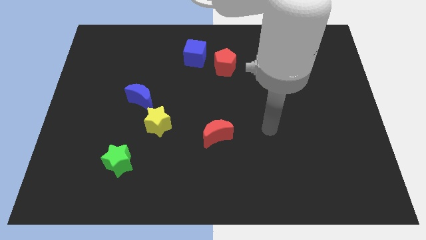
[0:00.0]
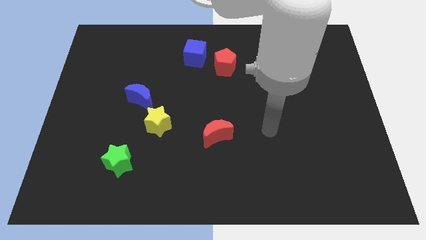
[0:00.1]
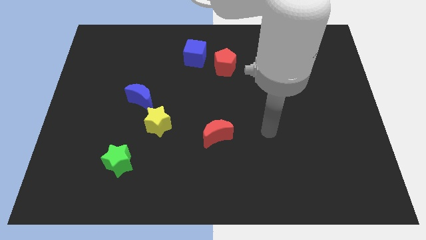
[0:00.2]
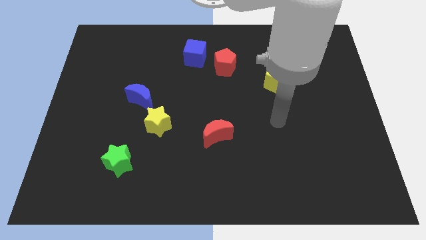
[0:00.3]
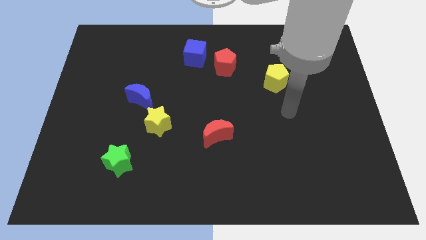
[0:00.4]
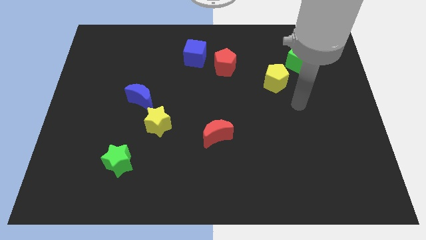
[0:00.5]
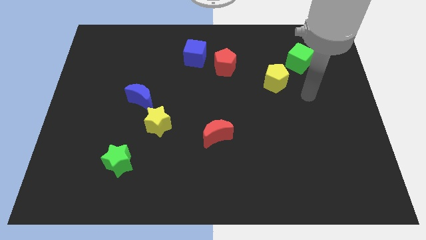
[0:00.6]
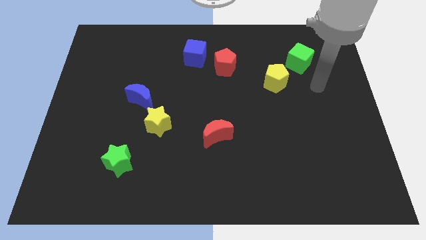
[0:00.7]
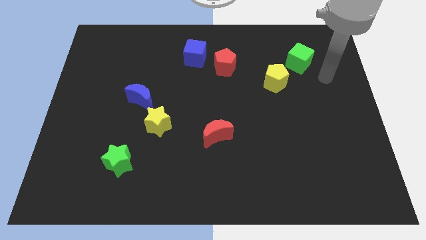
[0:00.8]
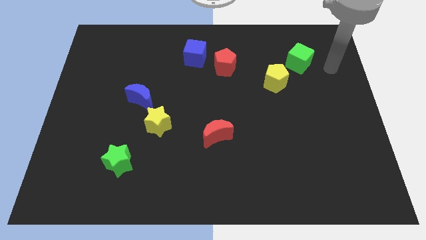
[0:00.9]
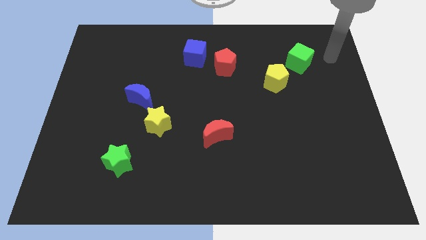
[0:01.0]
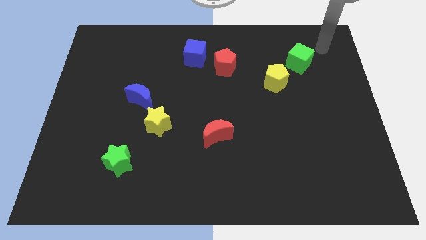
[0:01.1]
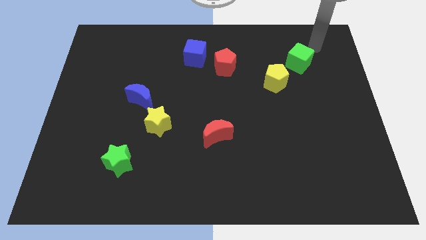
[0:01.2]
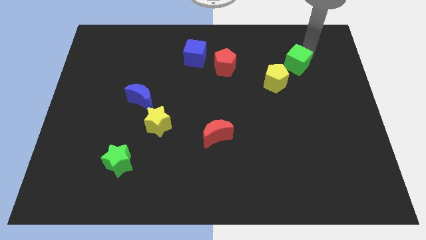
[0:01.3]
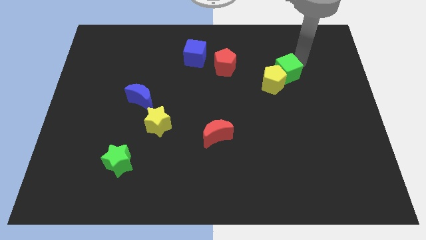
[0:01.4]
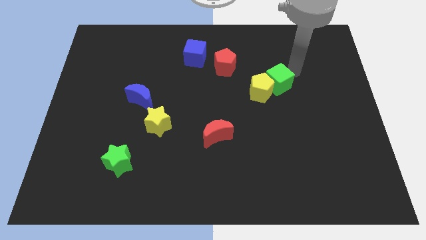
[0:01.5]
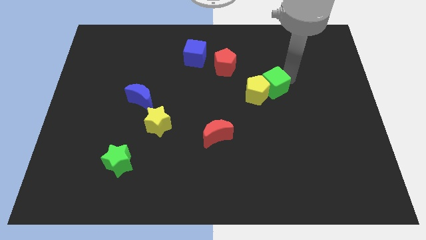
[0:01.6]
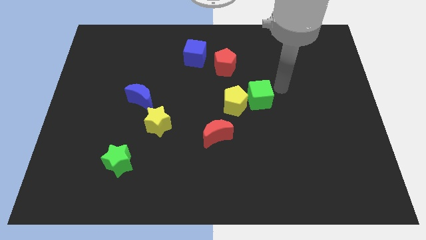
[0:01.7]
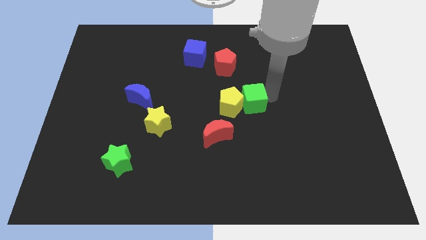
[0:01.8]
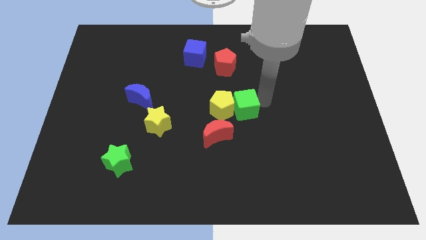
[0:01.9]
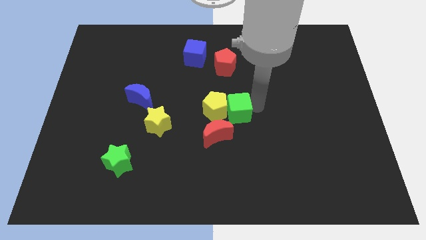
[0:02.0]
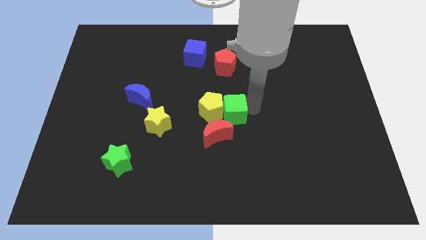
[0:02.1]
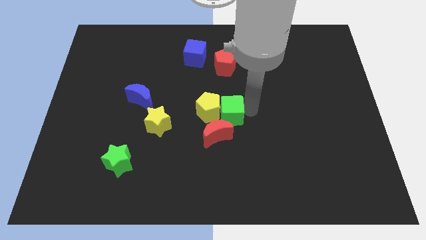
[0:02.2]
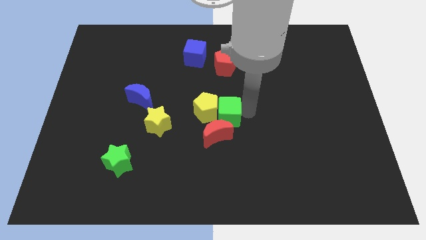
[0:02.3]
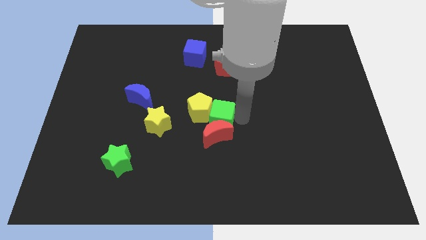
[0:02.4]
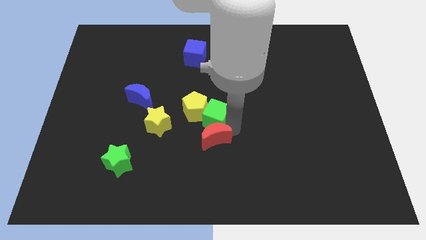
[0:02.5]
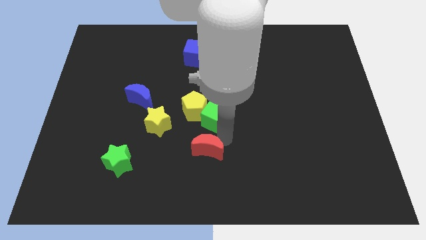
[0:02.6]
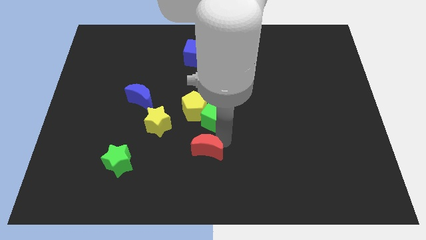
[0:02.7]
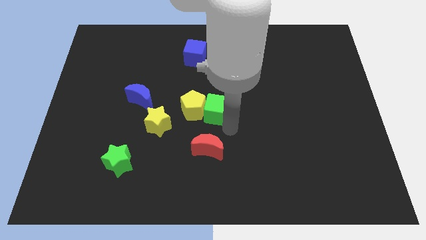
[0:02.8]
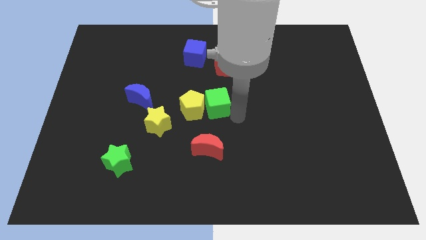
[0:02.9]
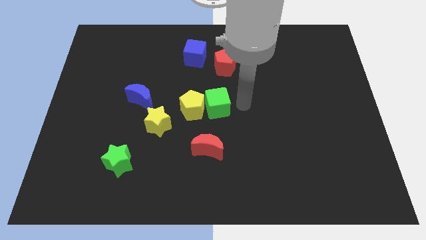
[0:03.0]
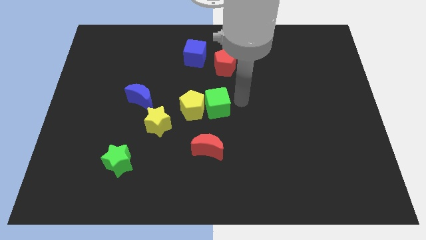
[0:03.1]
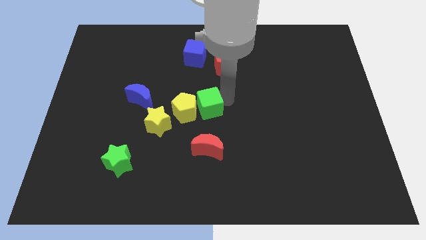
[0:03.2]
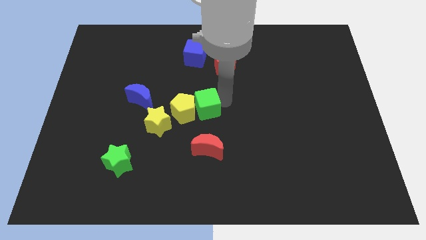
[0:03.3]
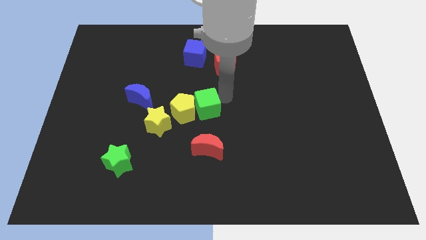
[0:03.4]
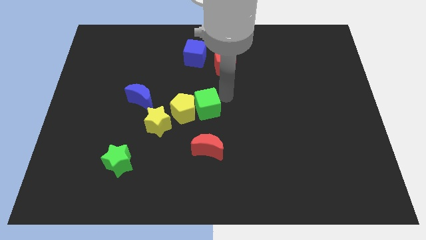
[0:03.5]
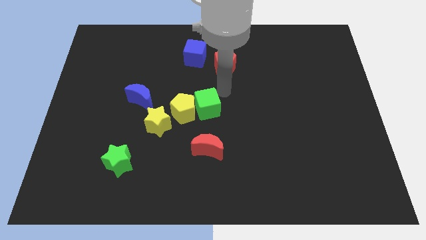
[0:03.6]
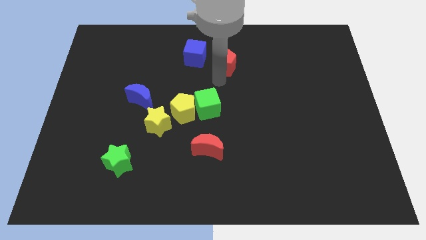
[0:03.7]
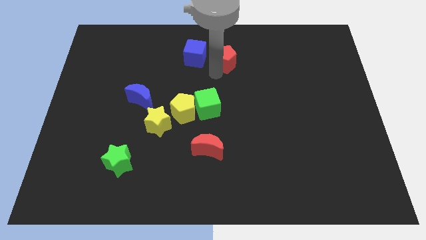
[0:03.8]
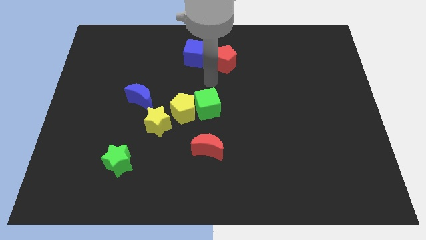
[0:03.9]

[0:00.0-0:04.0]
push green cube with yellow pentagon to center of the board

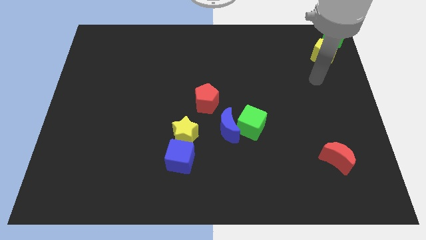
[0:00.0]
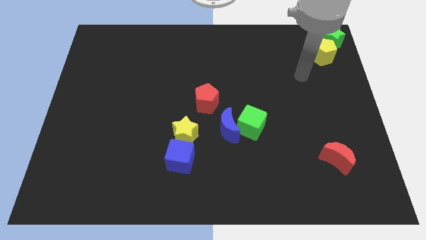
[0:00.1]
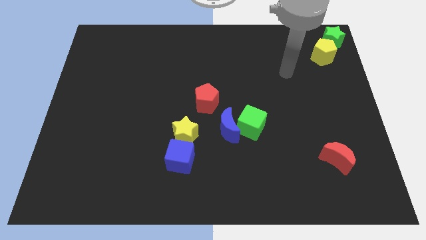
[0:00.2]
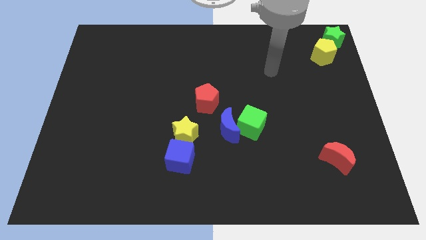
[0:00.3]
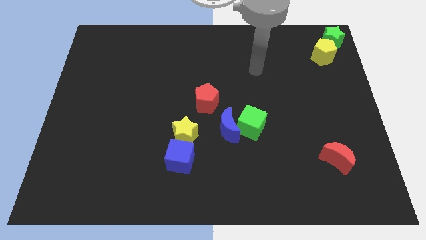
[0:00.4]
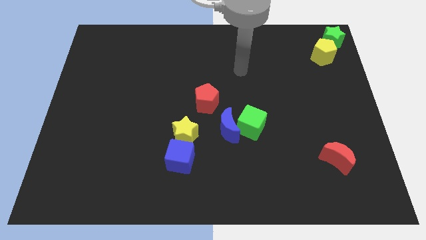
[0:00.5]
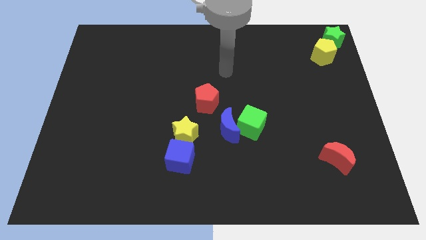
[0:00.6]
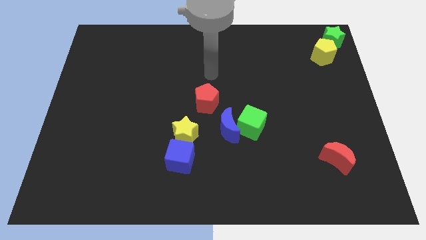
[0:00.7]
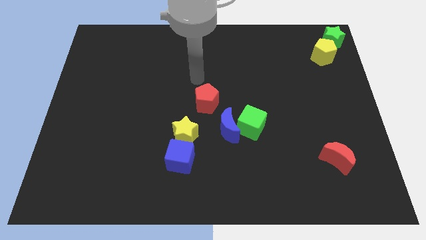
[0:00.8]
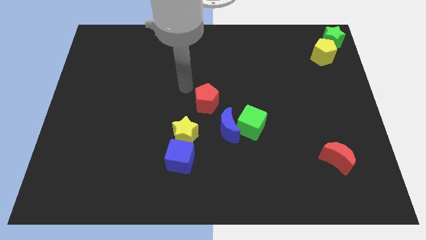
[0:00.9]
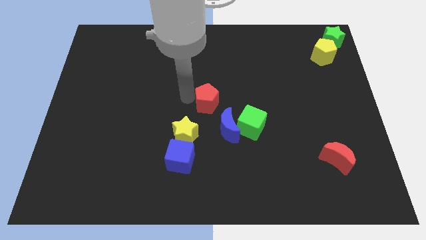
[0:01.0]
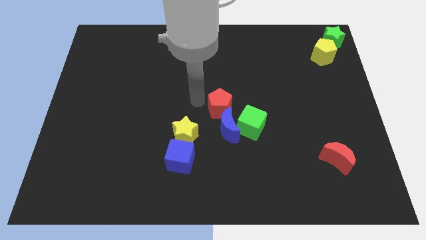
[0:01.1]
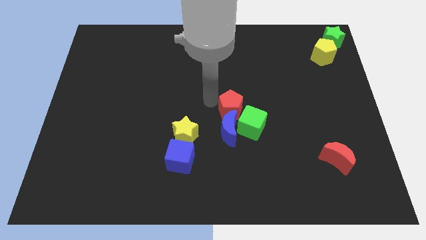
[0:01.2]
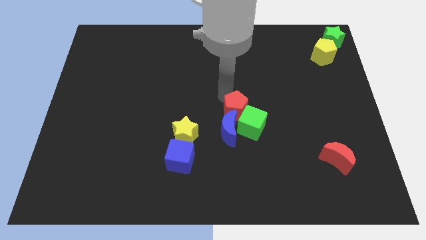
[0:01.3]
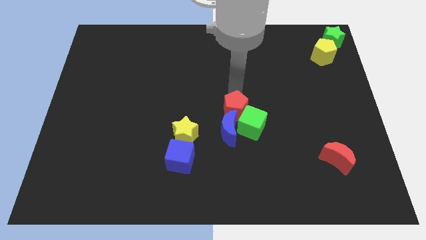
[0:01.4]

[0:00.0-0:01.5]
push the red pentagon into the blue crescent

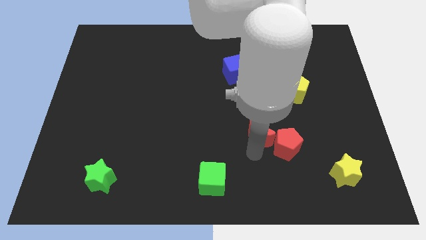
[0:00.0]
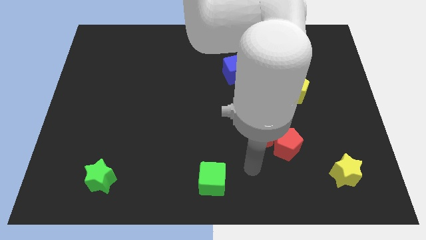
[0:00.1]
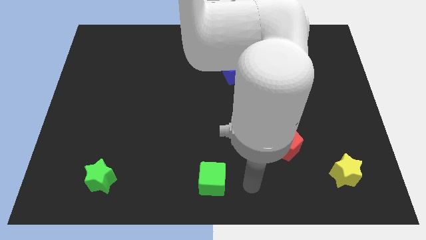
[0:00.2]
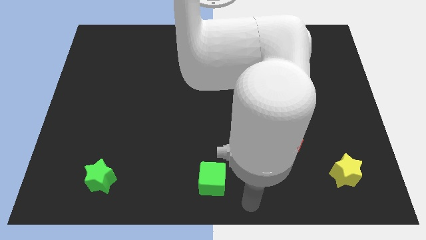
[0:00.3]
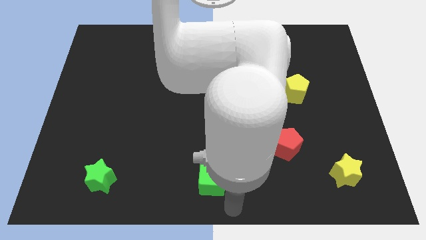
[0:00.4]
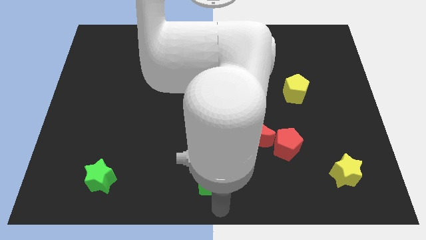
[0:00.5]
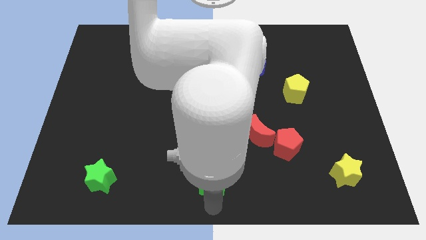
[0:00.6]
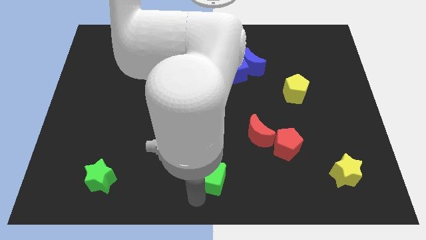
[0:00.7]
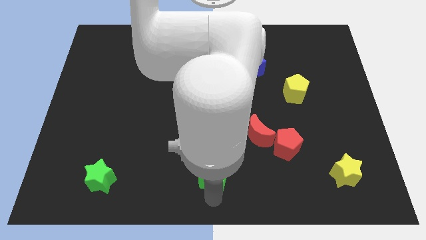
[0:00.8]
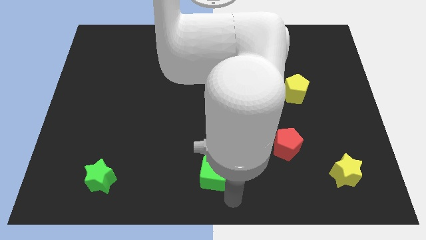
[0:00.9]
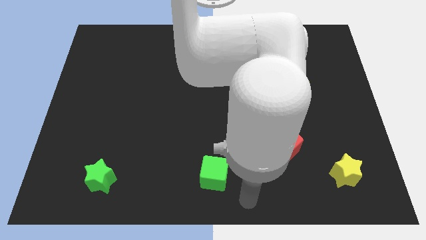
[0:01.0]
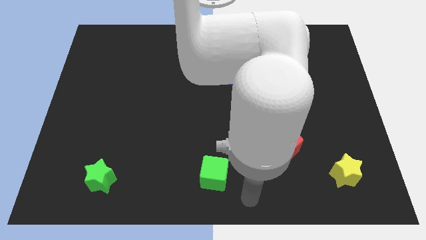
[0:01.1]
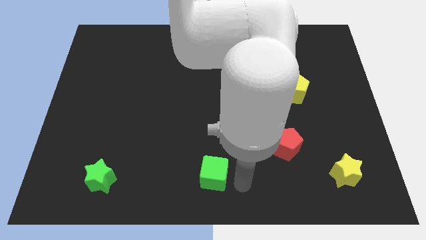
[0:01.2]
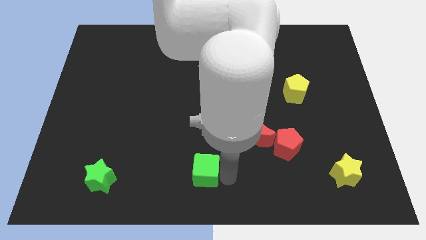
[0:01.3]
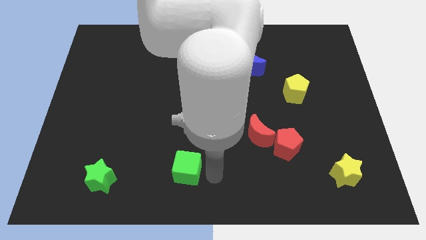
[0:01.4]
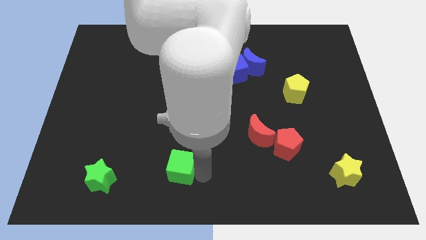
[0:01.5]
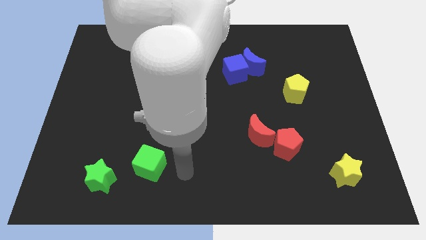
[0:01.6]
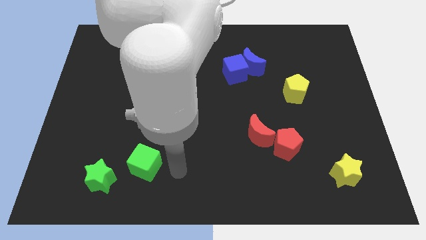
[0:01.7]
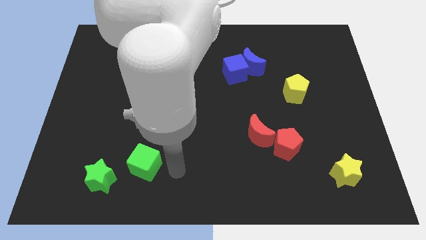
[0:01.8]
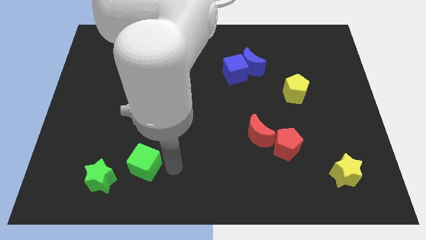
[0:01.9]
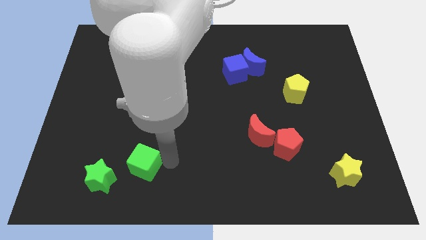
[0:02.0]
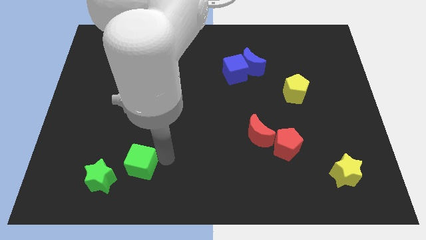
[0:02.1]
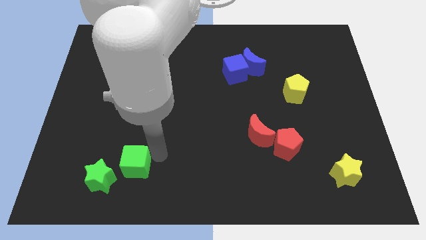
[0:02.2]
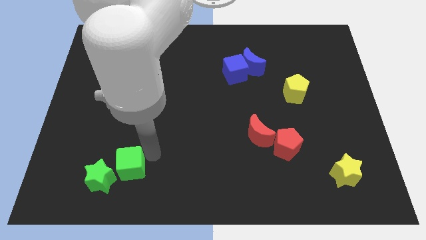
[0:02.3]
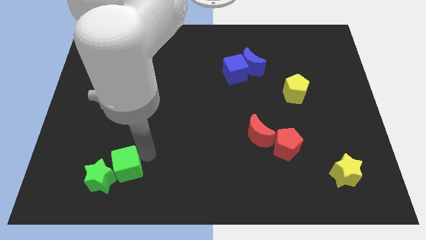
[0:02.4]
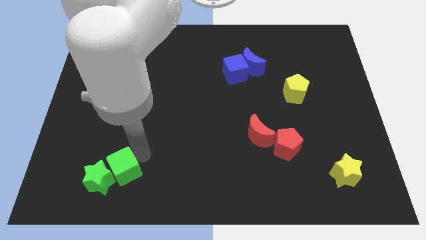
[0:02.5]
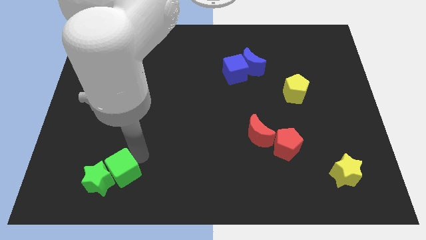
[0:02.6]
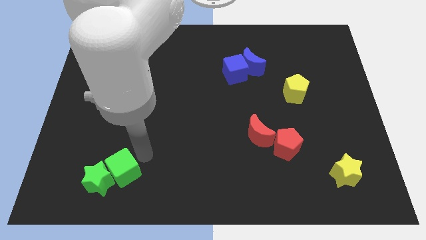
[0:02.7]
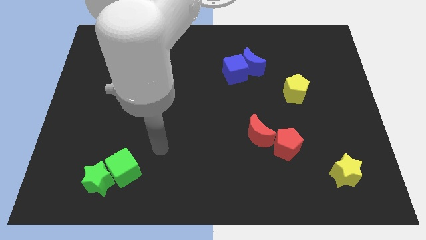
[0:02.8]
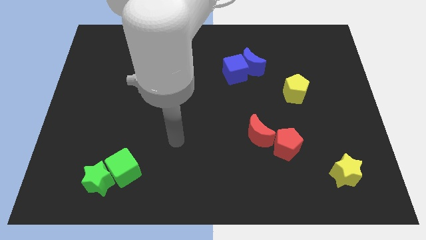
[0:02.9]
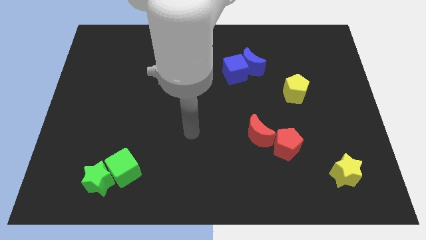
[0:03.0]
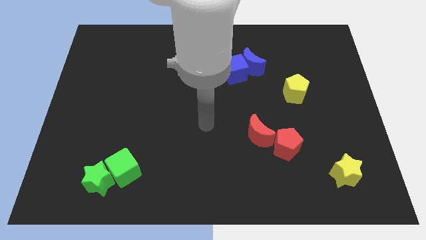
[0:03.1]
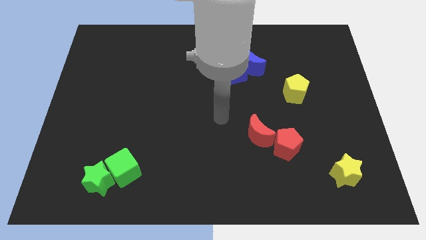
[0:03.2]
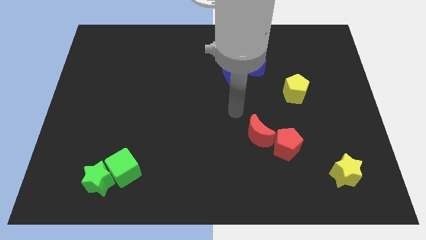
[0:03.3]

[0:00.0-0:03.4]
push the green cube to the right of the green star
